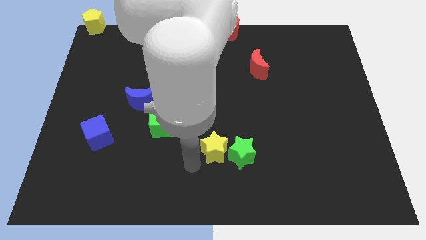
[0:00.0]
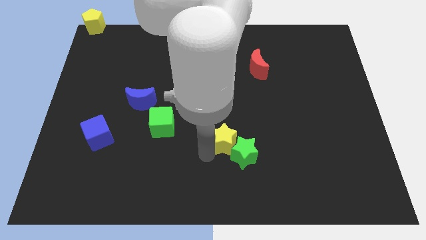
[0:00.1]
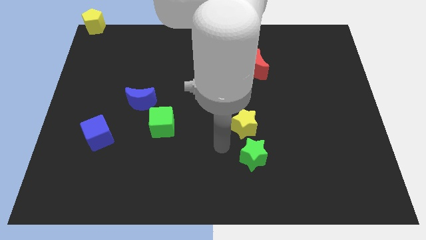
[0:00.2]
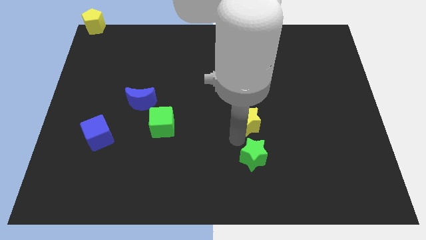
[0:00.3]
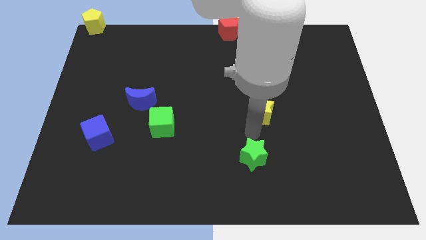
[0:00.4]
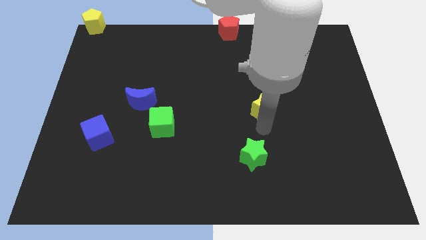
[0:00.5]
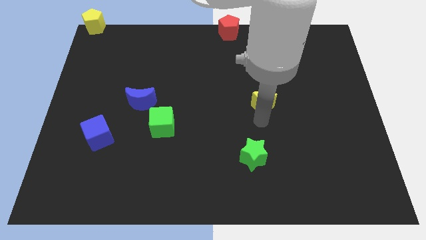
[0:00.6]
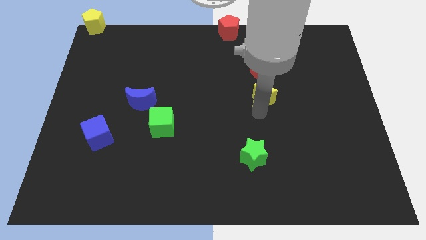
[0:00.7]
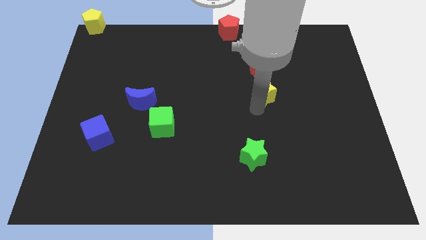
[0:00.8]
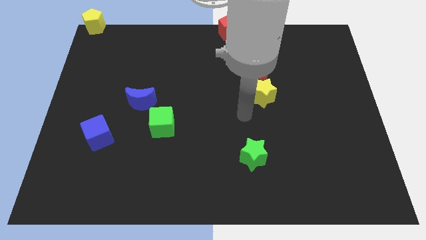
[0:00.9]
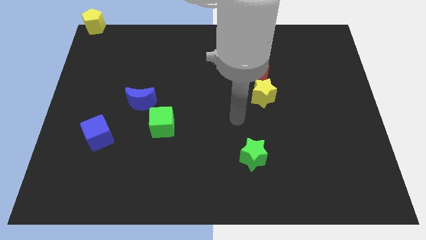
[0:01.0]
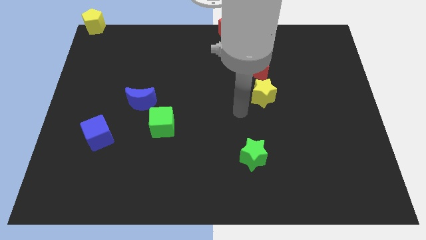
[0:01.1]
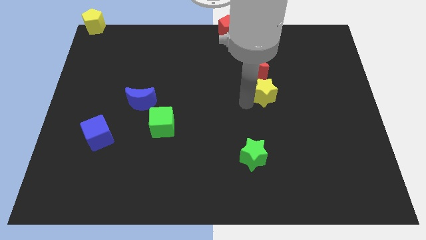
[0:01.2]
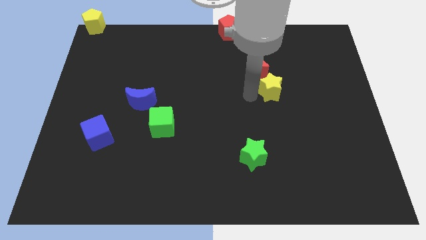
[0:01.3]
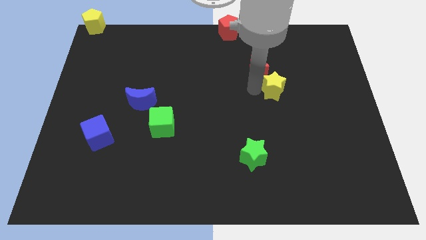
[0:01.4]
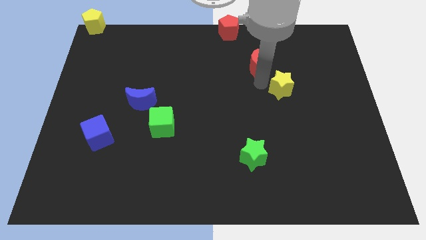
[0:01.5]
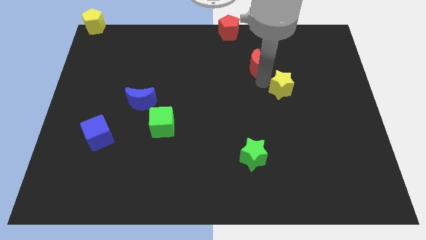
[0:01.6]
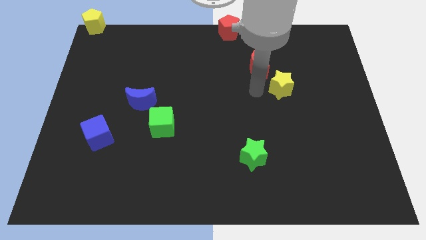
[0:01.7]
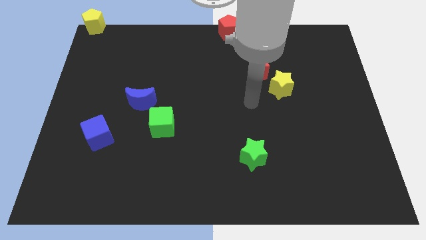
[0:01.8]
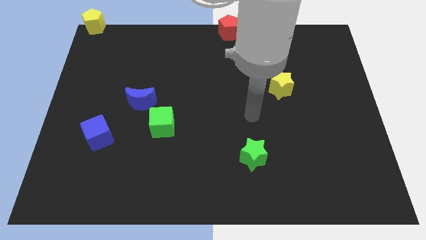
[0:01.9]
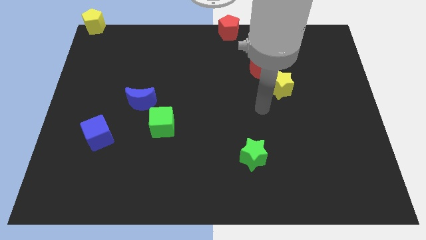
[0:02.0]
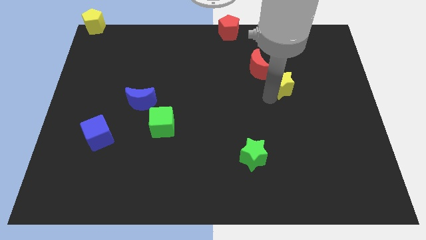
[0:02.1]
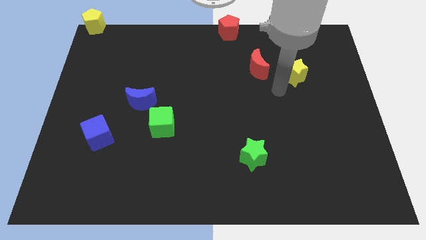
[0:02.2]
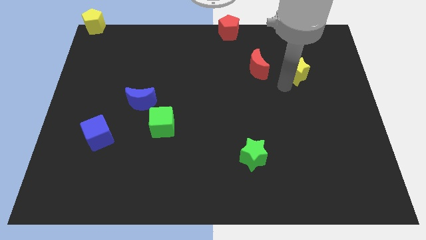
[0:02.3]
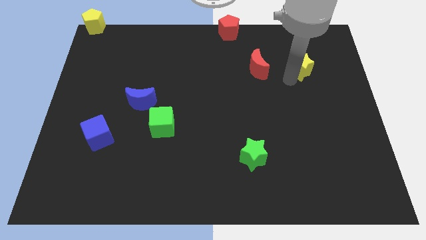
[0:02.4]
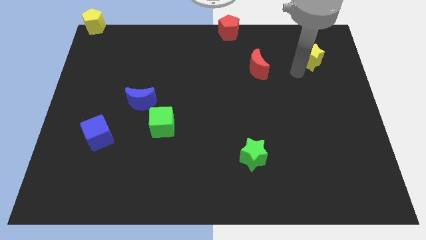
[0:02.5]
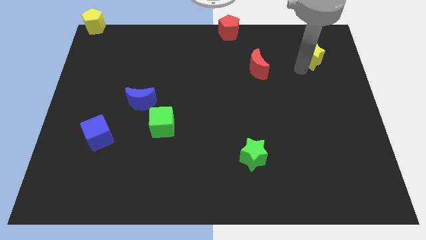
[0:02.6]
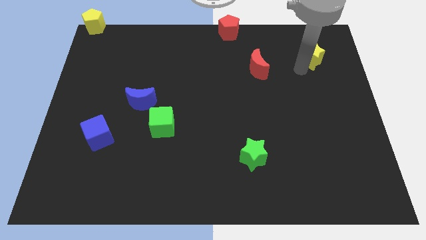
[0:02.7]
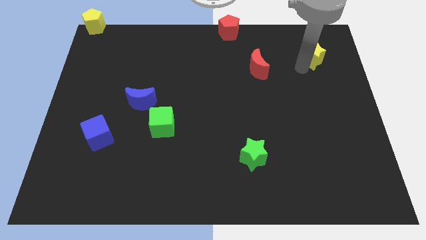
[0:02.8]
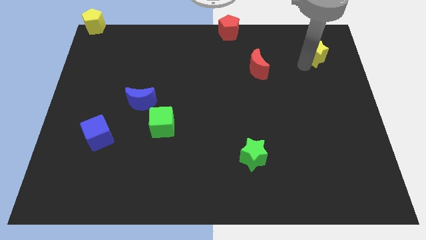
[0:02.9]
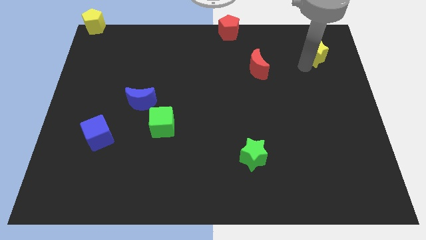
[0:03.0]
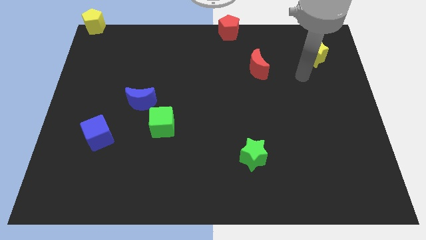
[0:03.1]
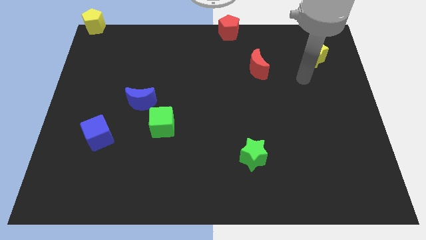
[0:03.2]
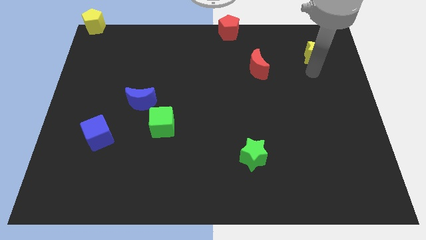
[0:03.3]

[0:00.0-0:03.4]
separate the green star and yellow star

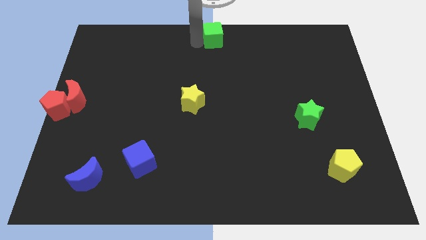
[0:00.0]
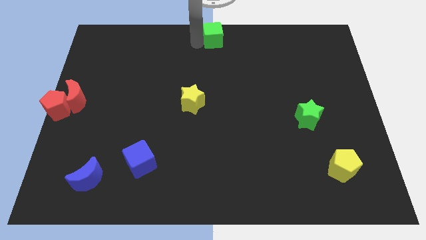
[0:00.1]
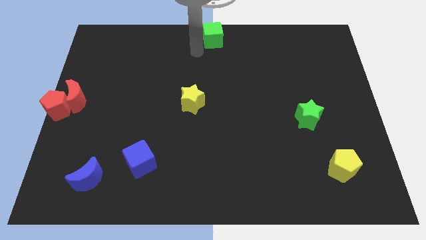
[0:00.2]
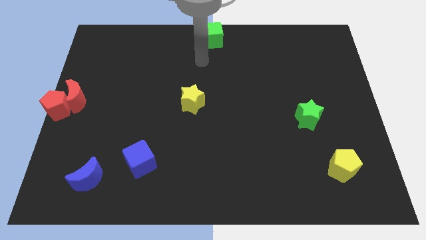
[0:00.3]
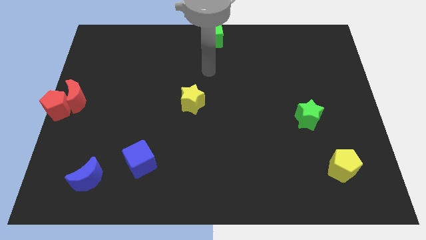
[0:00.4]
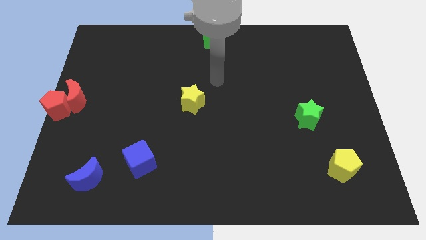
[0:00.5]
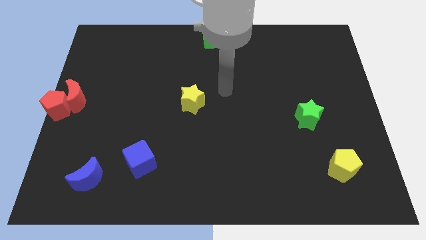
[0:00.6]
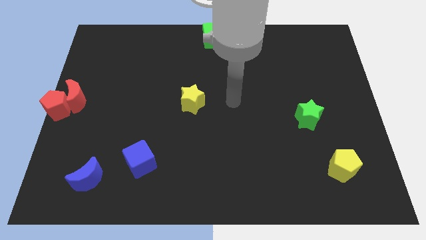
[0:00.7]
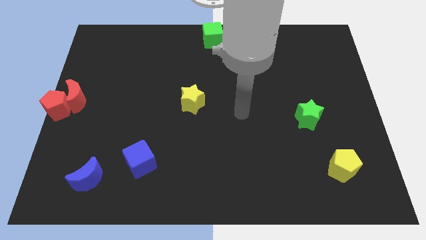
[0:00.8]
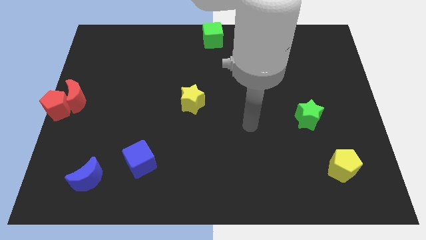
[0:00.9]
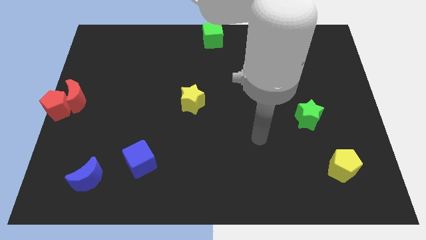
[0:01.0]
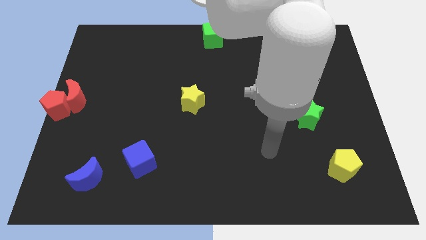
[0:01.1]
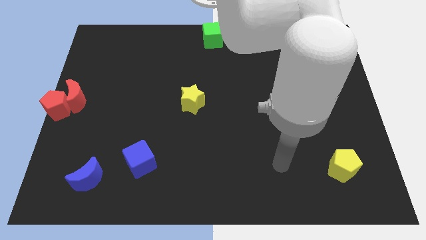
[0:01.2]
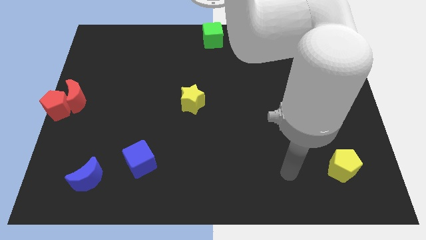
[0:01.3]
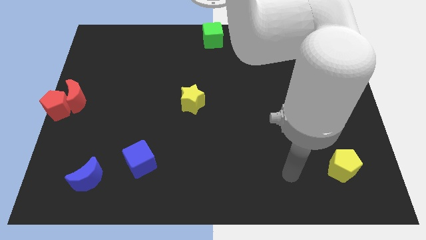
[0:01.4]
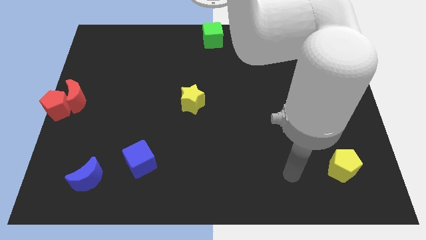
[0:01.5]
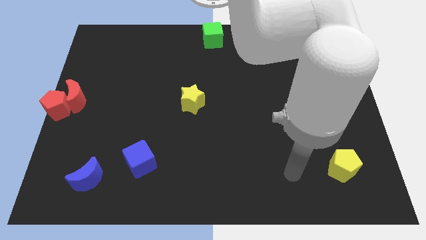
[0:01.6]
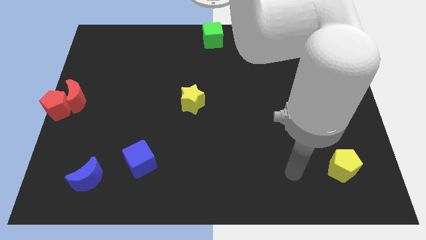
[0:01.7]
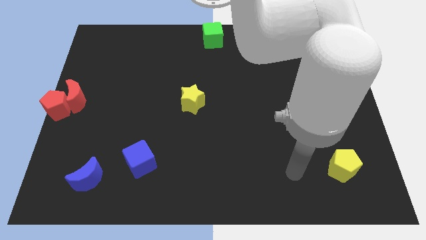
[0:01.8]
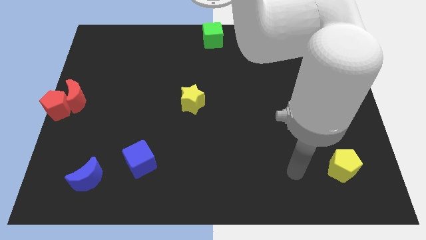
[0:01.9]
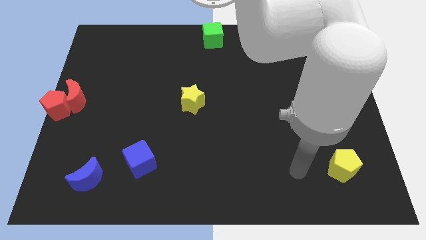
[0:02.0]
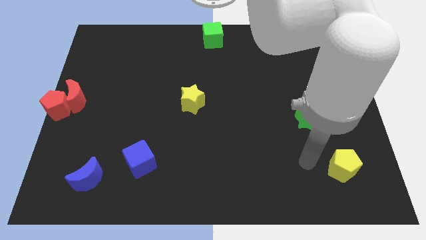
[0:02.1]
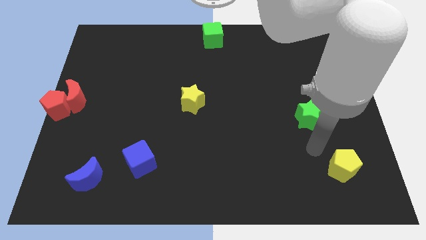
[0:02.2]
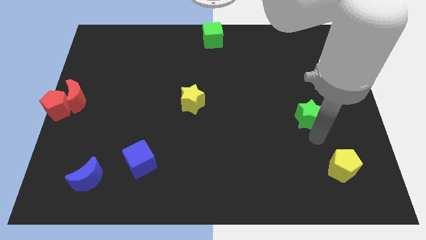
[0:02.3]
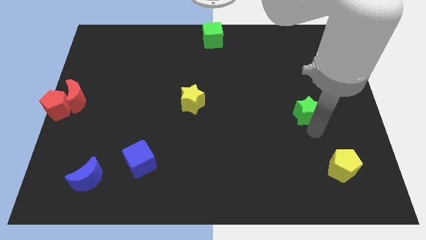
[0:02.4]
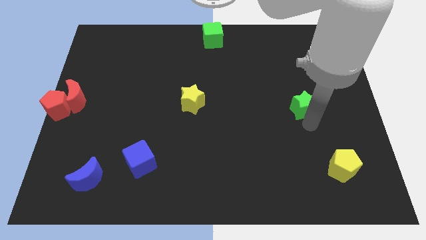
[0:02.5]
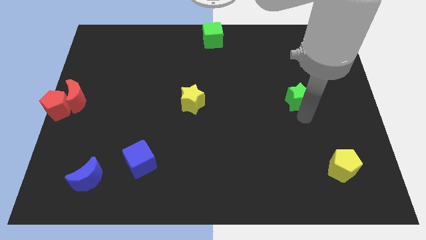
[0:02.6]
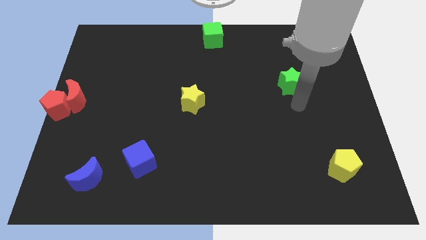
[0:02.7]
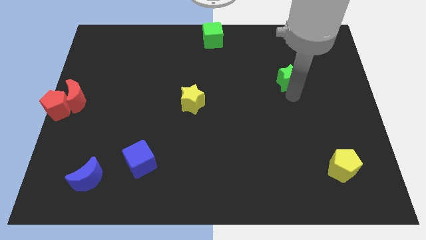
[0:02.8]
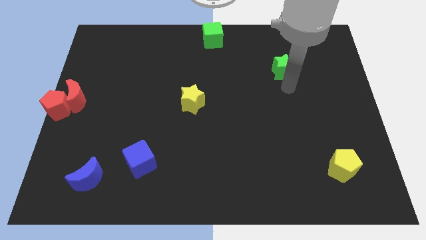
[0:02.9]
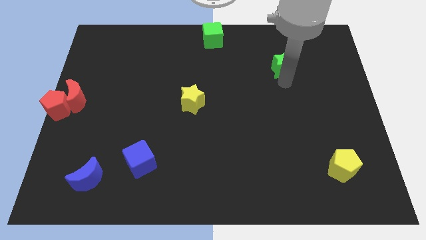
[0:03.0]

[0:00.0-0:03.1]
move the arm away from the green cube

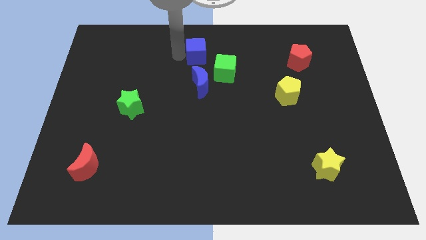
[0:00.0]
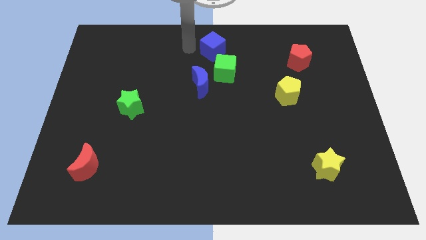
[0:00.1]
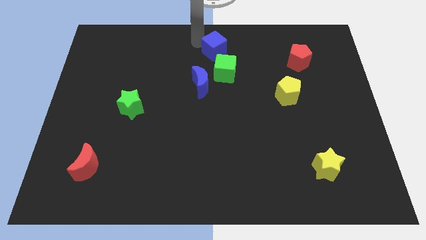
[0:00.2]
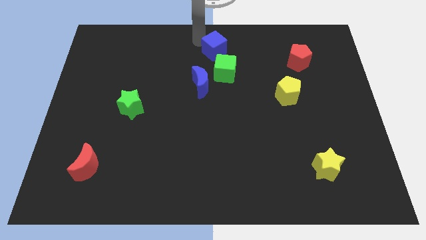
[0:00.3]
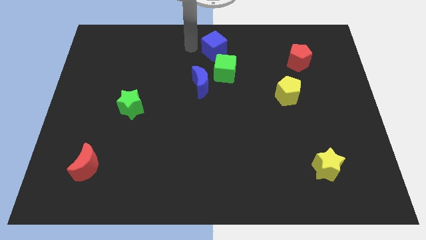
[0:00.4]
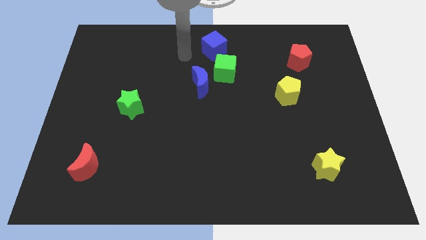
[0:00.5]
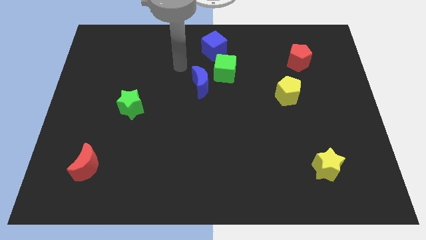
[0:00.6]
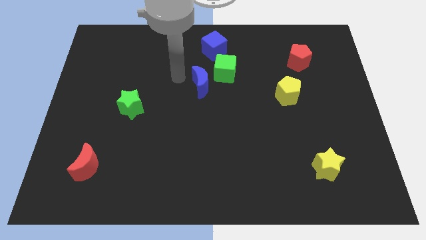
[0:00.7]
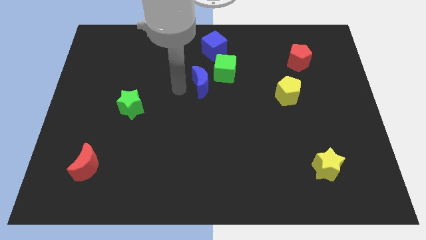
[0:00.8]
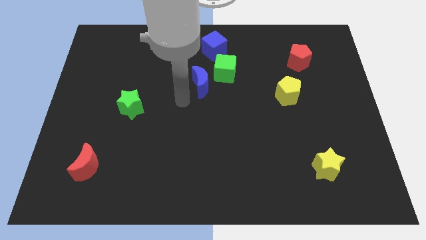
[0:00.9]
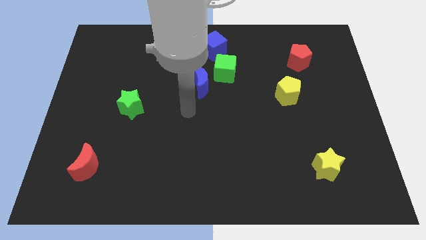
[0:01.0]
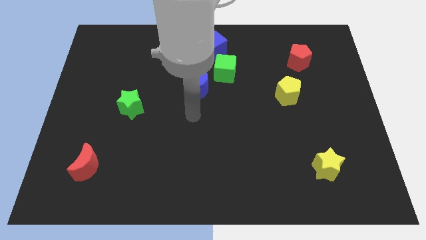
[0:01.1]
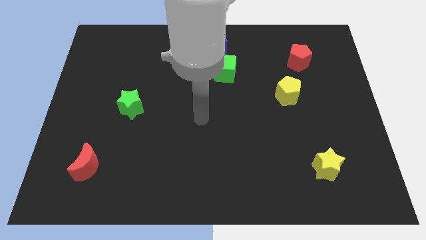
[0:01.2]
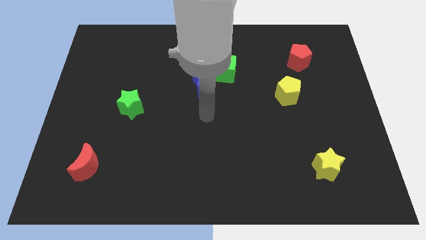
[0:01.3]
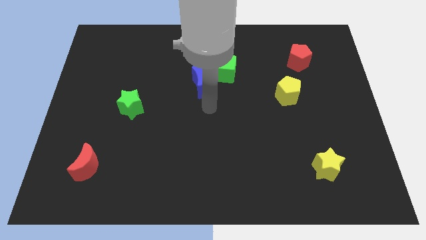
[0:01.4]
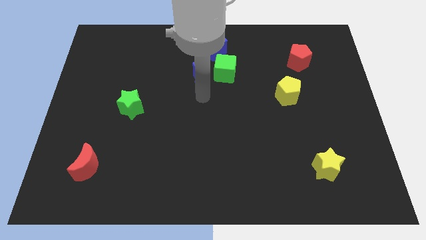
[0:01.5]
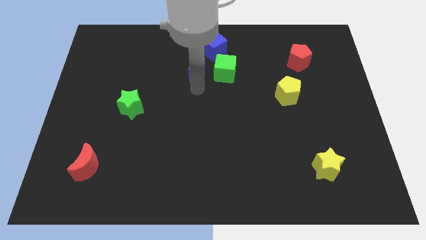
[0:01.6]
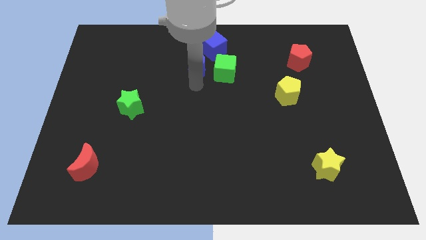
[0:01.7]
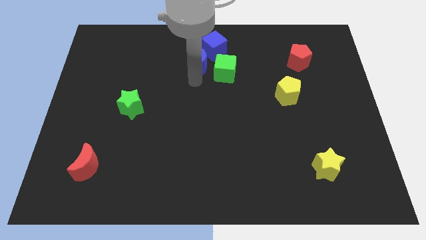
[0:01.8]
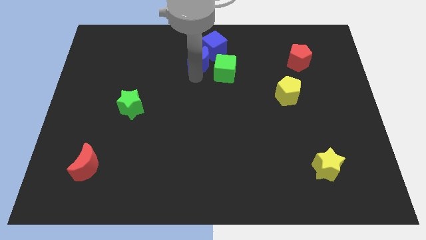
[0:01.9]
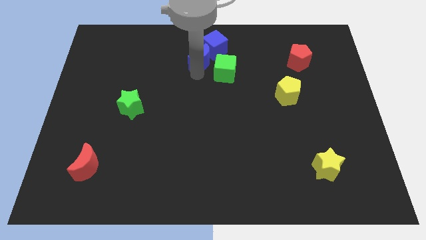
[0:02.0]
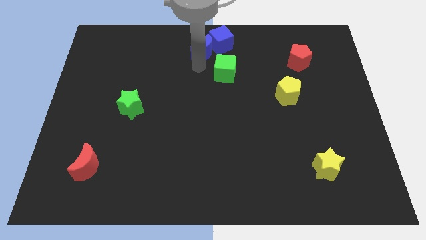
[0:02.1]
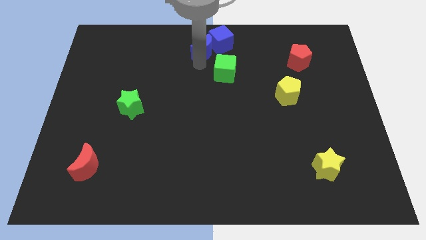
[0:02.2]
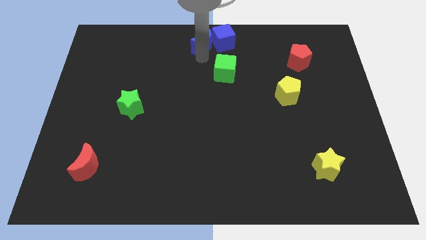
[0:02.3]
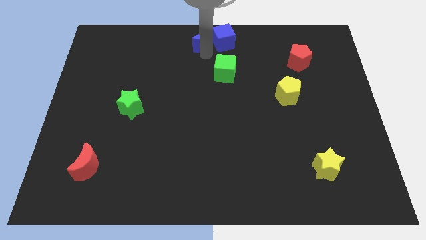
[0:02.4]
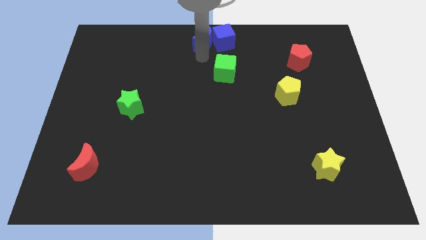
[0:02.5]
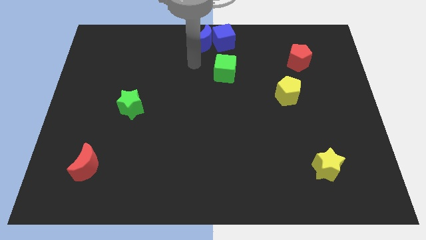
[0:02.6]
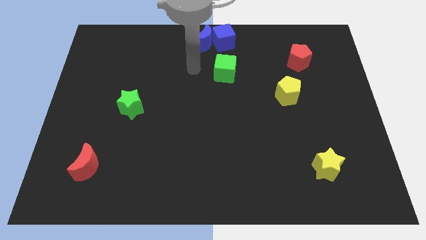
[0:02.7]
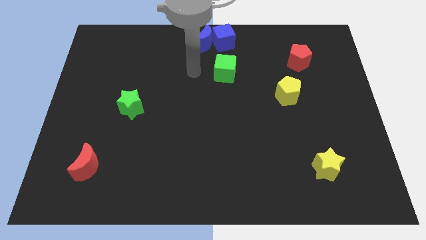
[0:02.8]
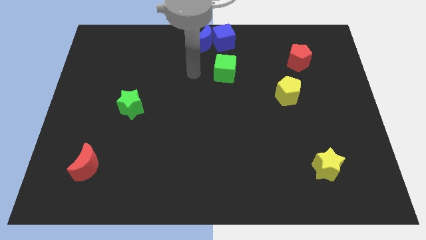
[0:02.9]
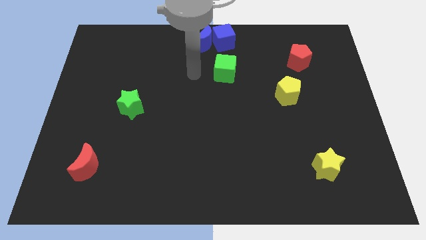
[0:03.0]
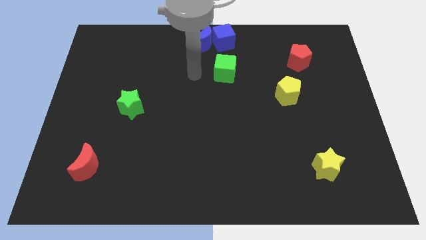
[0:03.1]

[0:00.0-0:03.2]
push the blue moon into blue cube to the top
